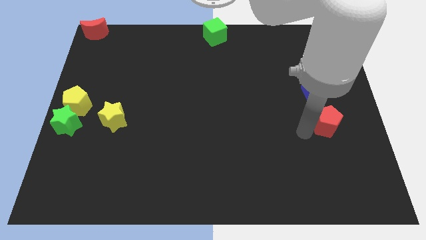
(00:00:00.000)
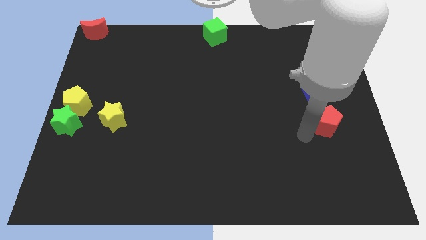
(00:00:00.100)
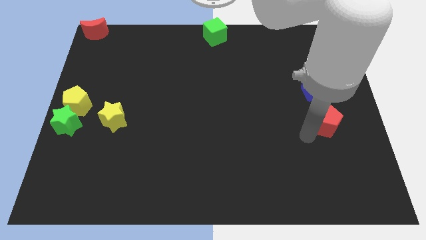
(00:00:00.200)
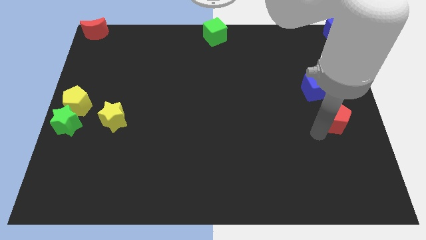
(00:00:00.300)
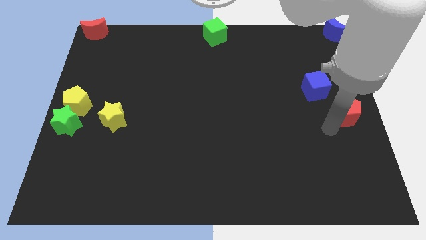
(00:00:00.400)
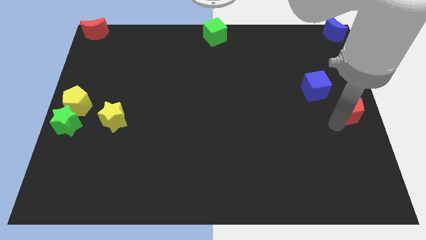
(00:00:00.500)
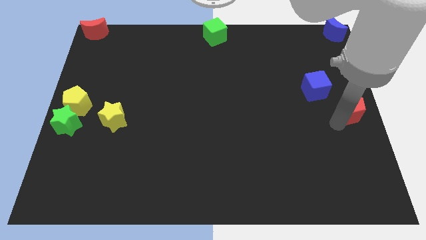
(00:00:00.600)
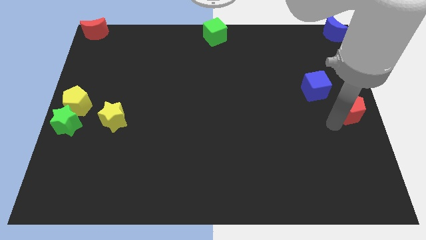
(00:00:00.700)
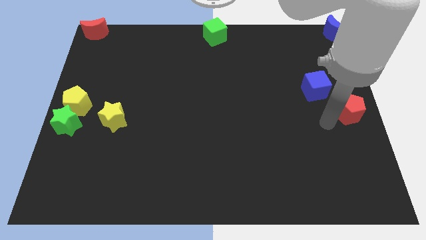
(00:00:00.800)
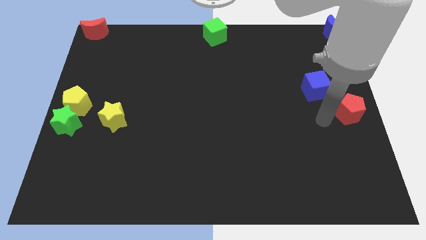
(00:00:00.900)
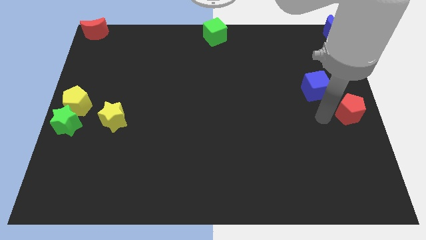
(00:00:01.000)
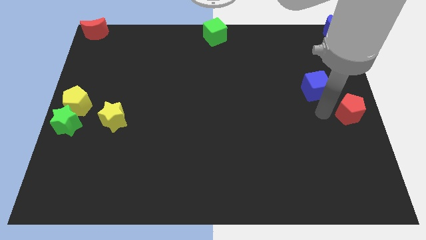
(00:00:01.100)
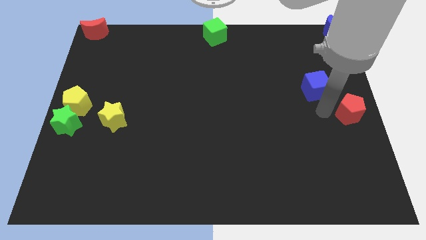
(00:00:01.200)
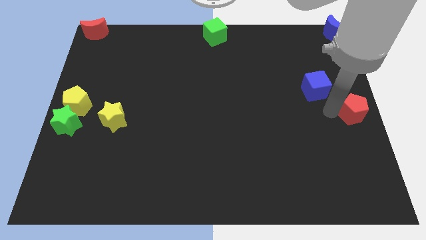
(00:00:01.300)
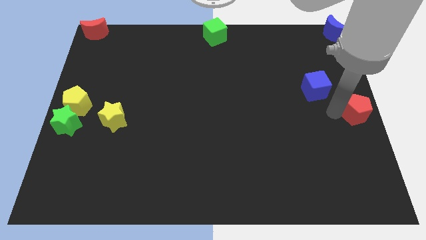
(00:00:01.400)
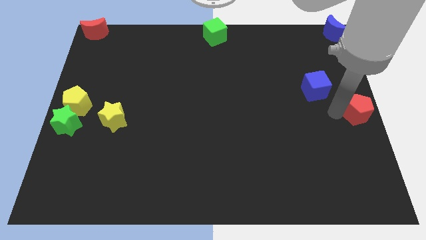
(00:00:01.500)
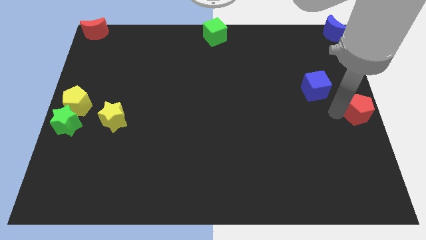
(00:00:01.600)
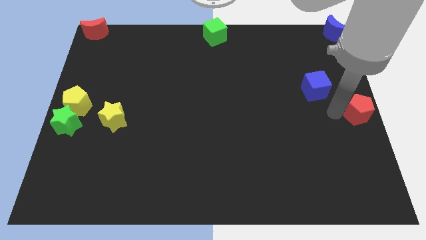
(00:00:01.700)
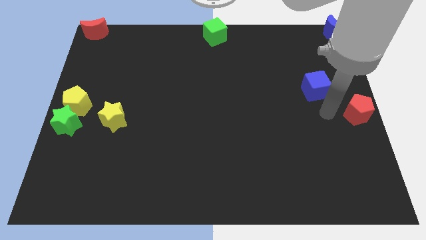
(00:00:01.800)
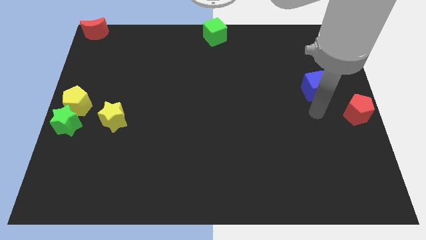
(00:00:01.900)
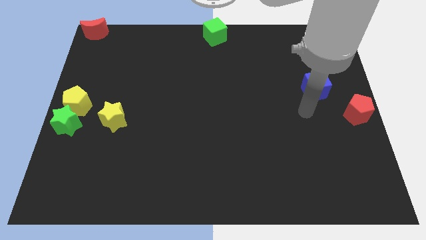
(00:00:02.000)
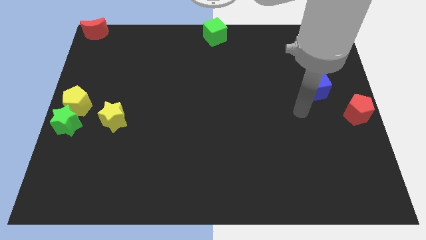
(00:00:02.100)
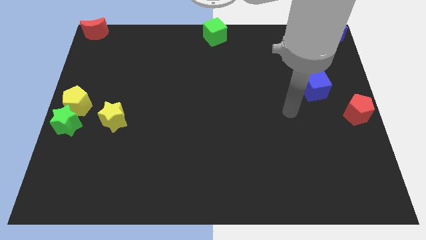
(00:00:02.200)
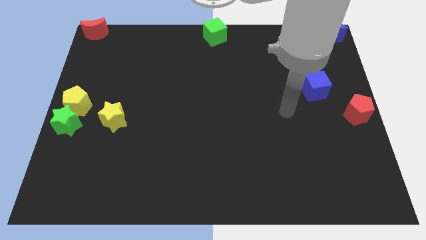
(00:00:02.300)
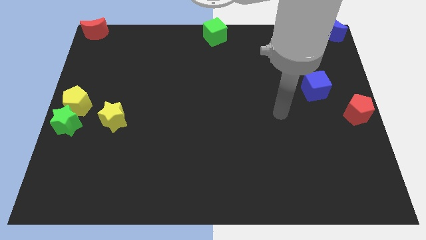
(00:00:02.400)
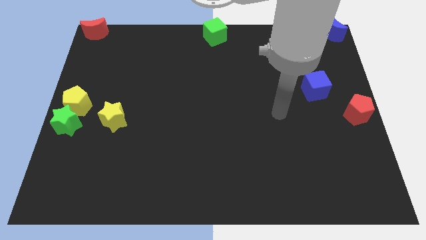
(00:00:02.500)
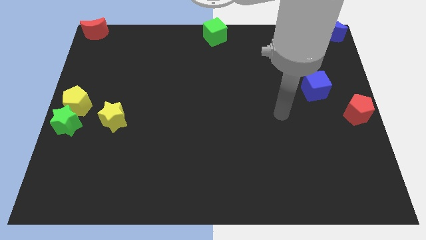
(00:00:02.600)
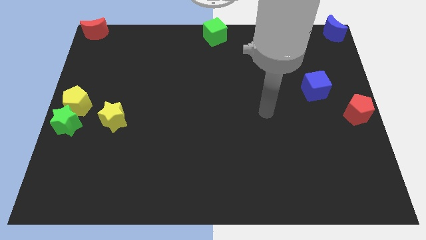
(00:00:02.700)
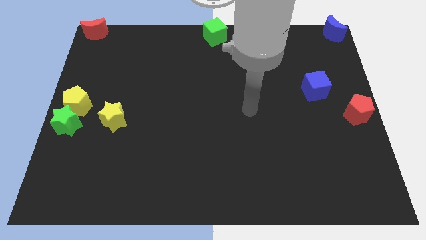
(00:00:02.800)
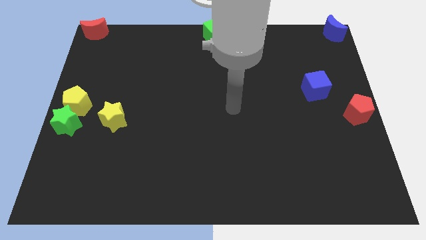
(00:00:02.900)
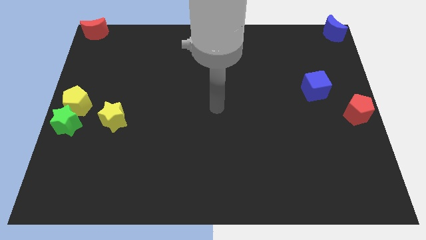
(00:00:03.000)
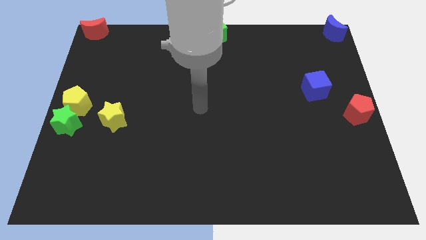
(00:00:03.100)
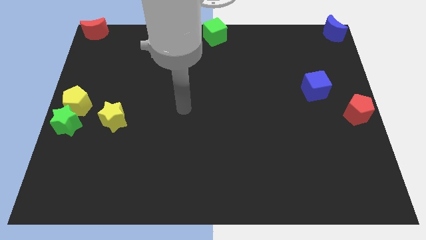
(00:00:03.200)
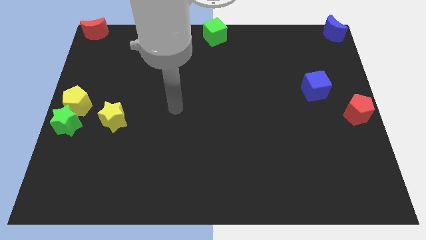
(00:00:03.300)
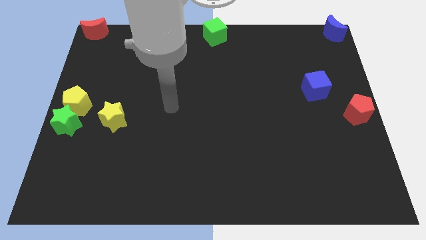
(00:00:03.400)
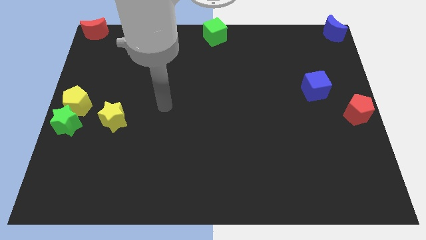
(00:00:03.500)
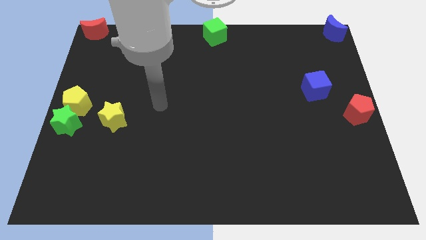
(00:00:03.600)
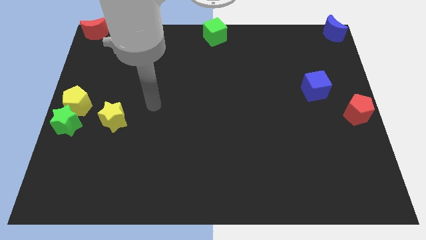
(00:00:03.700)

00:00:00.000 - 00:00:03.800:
push the red pentagon to the center right of the board

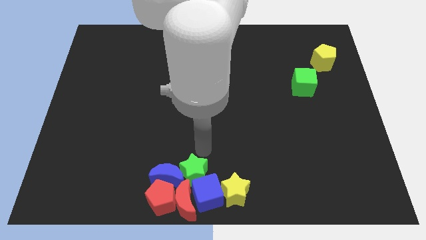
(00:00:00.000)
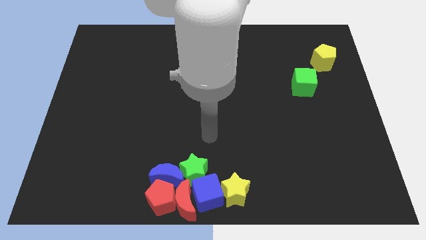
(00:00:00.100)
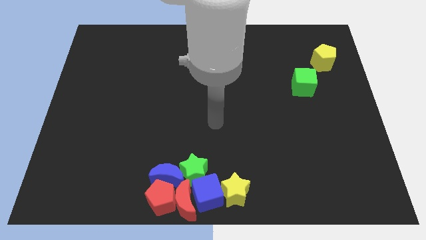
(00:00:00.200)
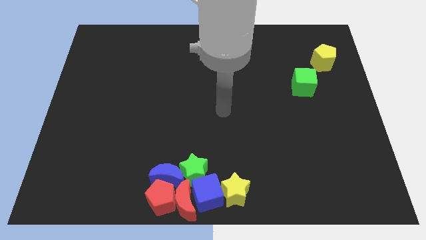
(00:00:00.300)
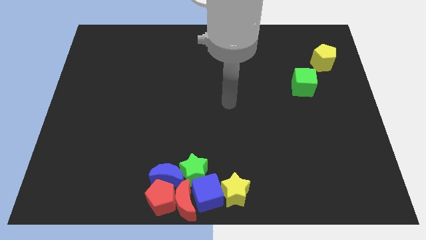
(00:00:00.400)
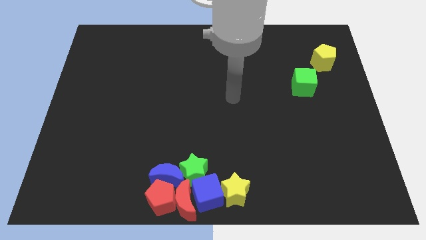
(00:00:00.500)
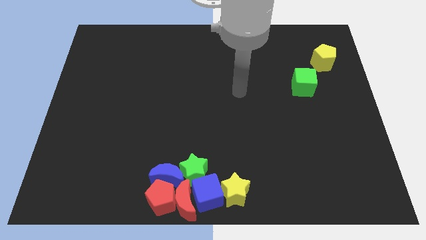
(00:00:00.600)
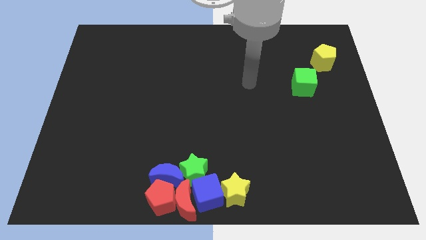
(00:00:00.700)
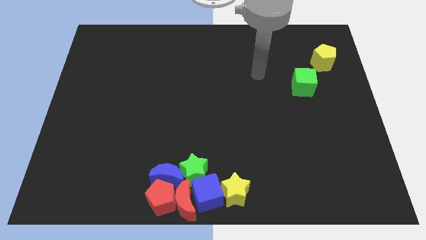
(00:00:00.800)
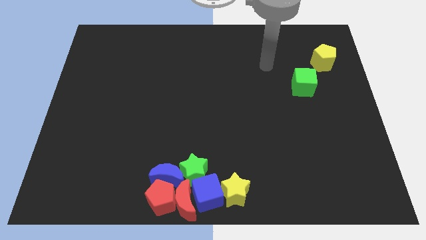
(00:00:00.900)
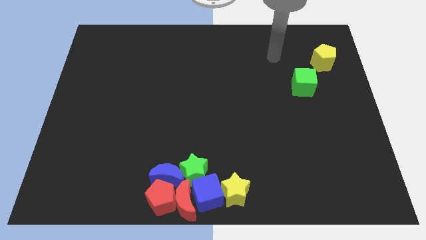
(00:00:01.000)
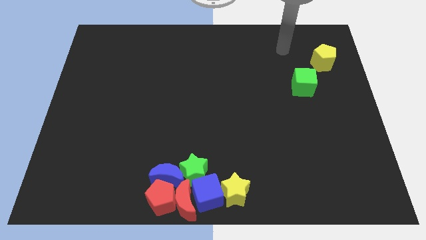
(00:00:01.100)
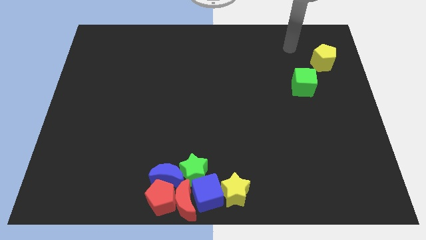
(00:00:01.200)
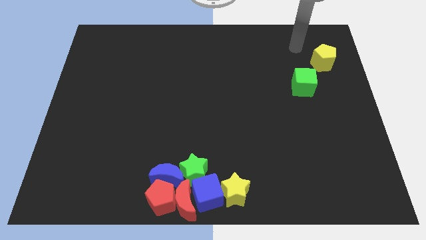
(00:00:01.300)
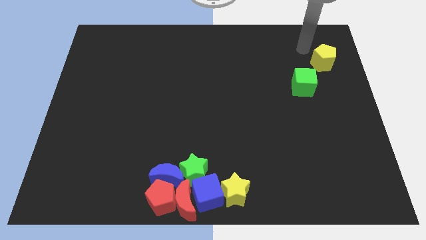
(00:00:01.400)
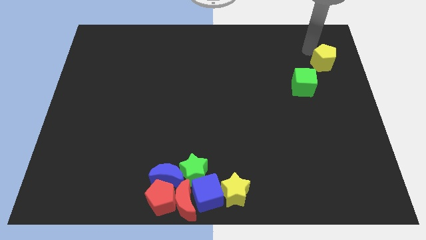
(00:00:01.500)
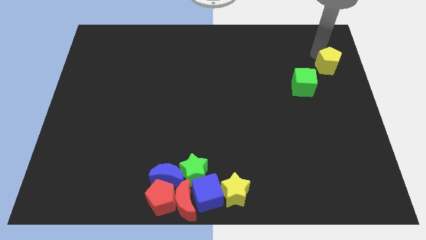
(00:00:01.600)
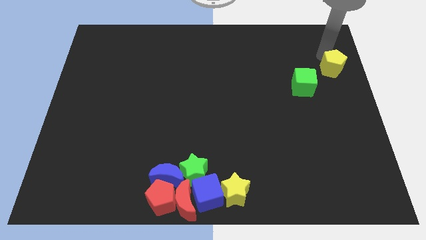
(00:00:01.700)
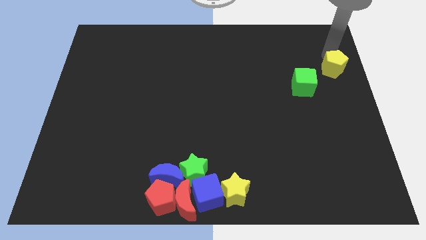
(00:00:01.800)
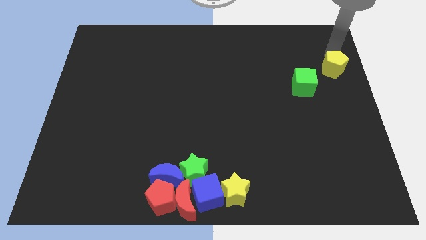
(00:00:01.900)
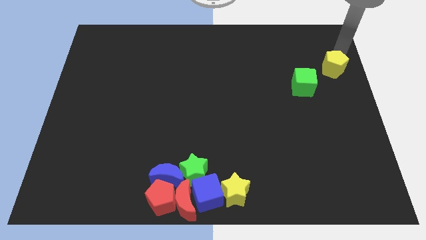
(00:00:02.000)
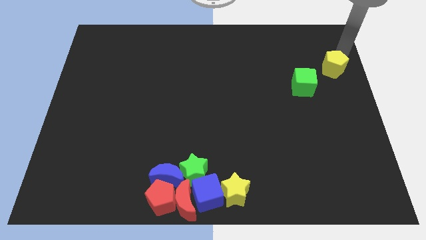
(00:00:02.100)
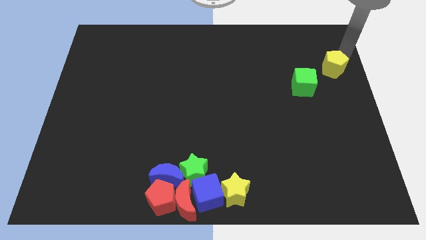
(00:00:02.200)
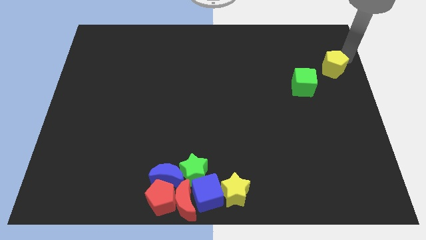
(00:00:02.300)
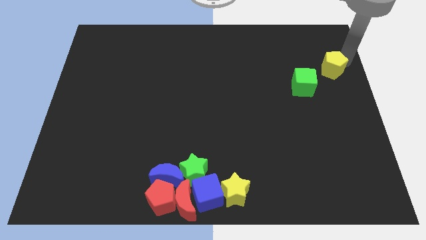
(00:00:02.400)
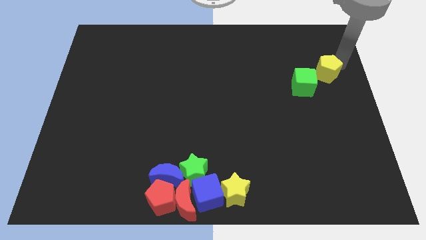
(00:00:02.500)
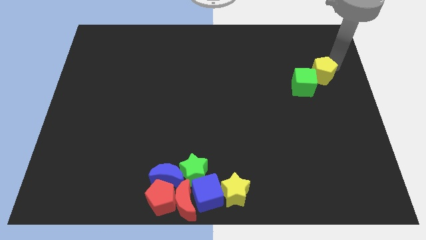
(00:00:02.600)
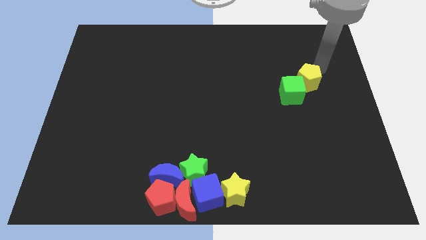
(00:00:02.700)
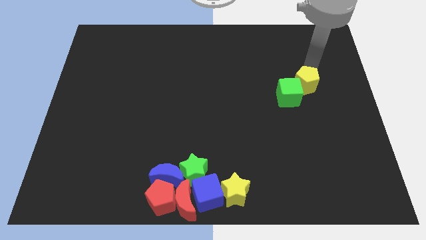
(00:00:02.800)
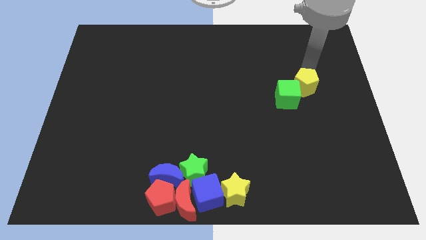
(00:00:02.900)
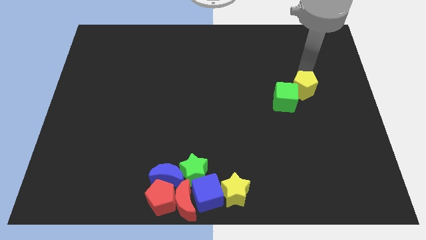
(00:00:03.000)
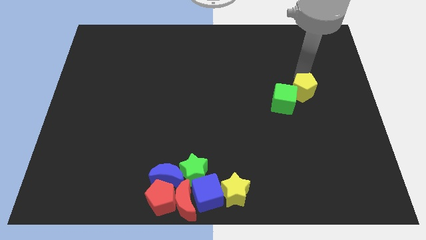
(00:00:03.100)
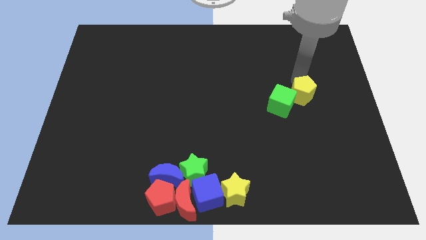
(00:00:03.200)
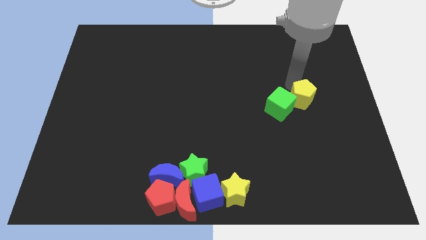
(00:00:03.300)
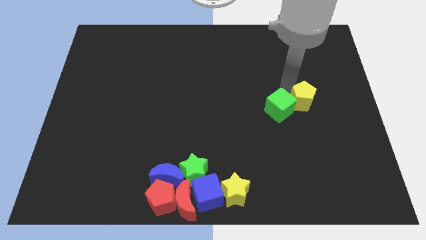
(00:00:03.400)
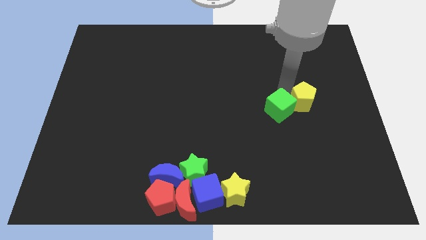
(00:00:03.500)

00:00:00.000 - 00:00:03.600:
push the yellow pentagon into the green cube

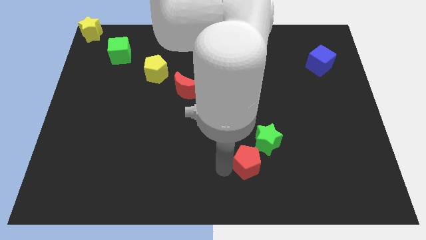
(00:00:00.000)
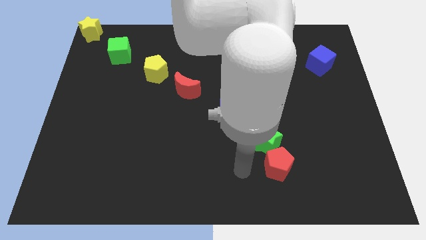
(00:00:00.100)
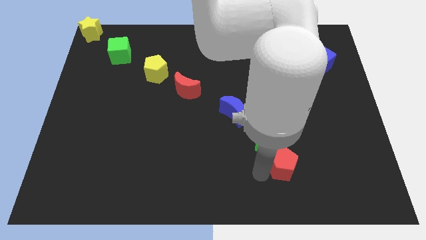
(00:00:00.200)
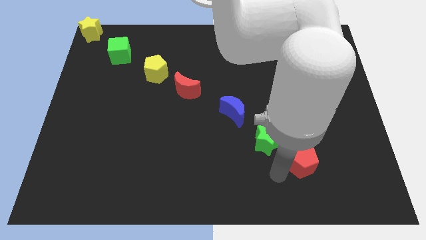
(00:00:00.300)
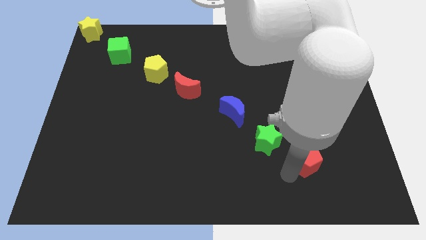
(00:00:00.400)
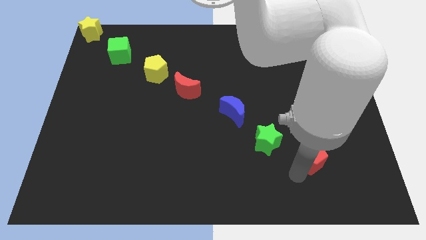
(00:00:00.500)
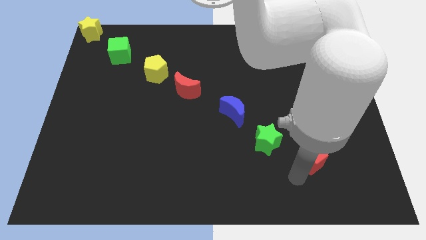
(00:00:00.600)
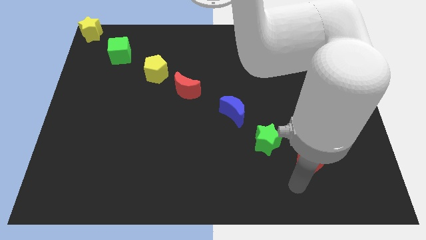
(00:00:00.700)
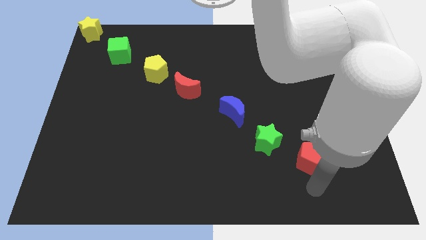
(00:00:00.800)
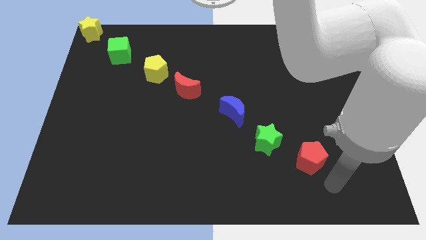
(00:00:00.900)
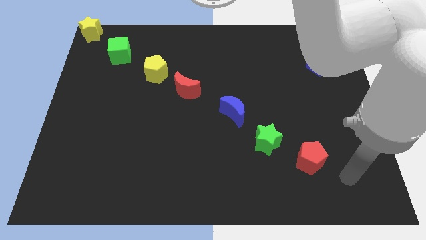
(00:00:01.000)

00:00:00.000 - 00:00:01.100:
separate red pentagon and green star

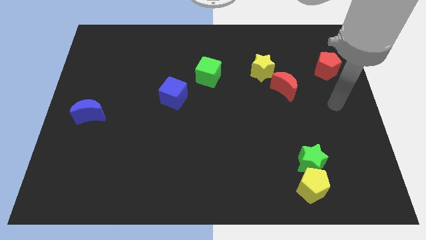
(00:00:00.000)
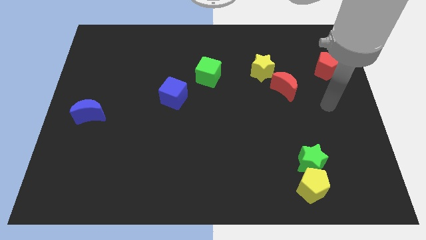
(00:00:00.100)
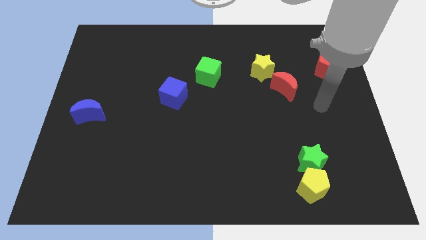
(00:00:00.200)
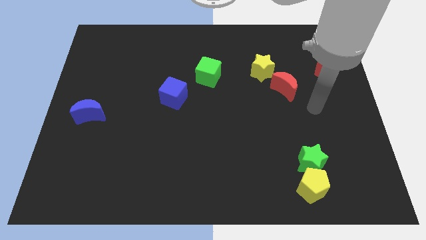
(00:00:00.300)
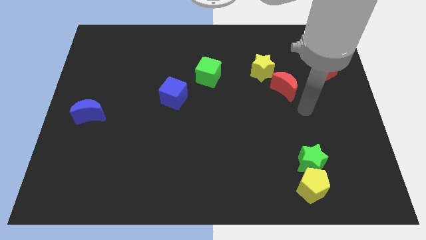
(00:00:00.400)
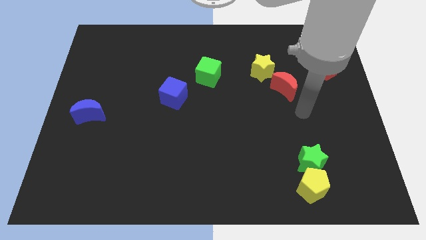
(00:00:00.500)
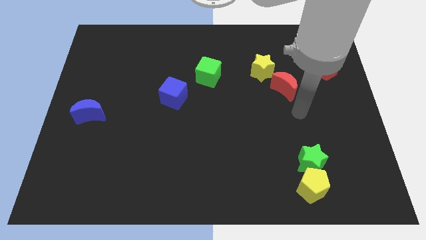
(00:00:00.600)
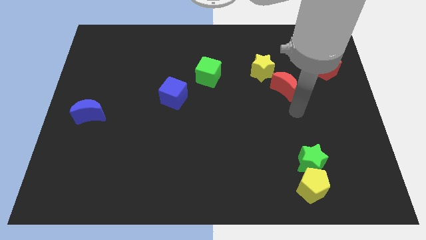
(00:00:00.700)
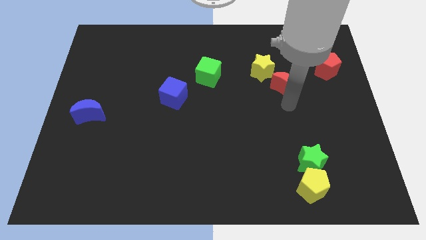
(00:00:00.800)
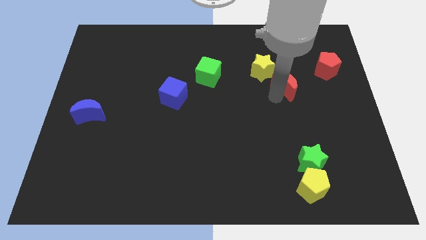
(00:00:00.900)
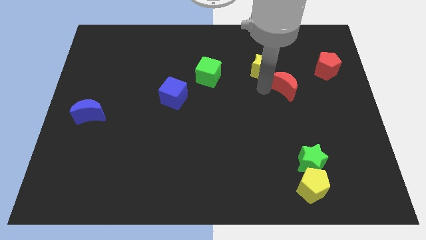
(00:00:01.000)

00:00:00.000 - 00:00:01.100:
move your arm to the bottom of yellow star
